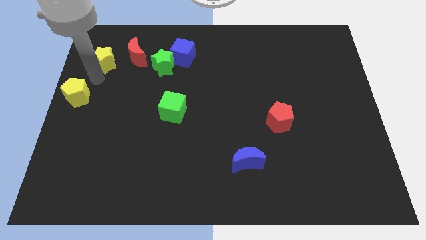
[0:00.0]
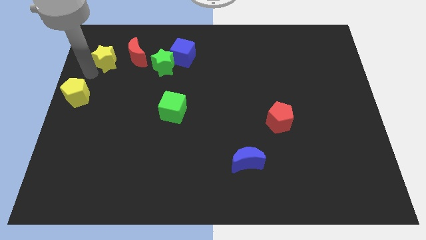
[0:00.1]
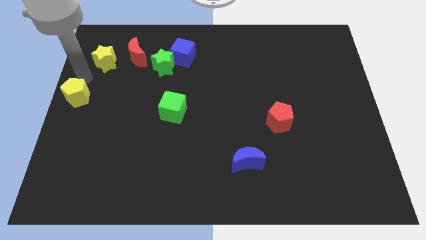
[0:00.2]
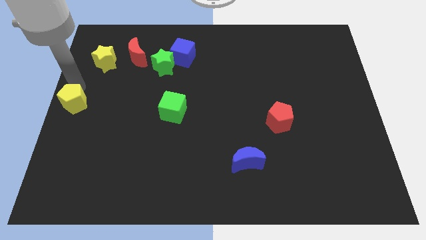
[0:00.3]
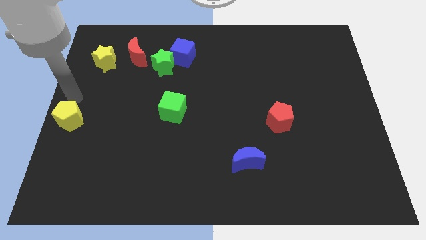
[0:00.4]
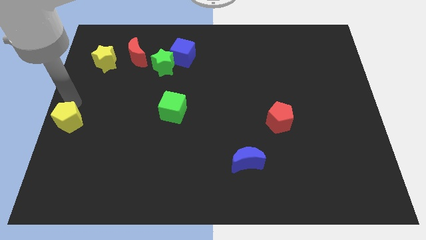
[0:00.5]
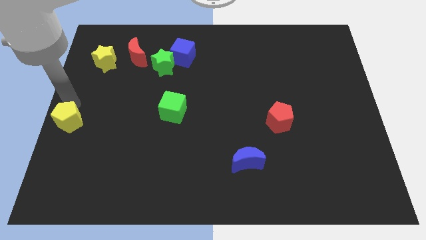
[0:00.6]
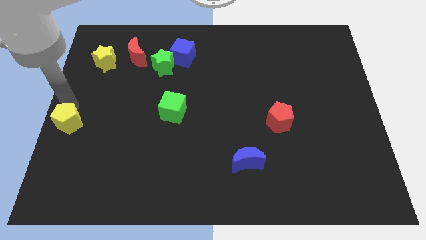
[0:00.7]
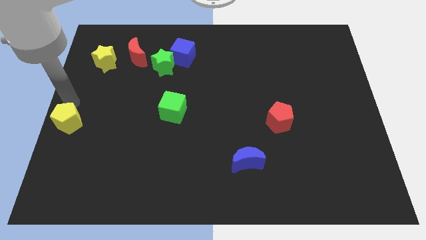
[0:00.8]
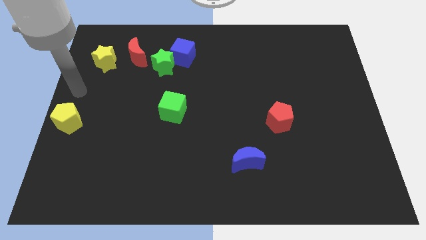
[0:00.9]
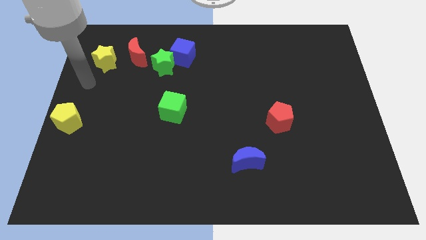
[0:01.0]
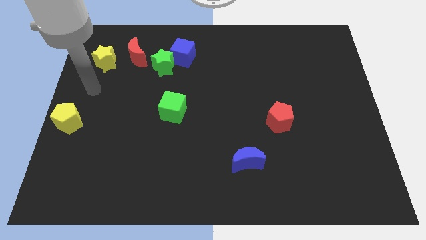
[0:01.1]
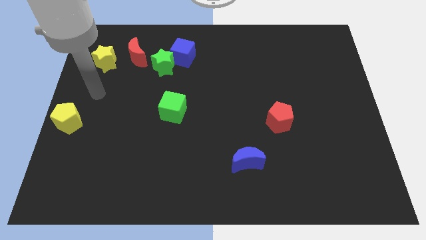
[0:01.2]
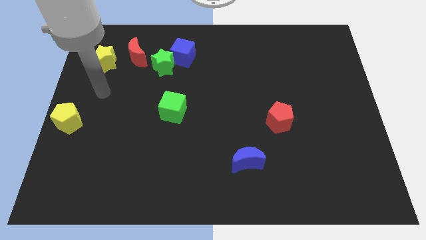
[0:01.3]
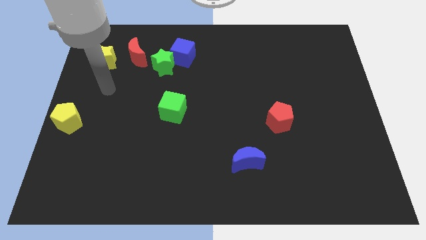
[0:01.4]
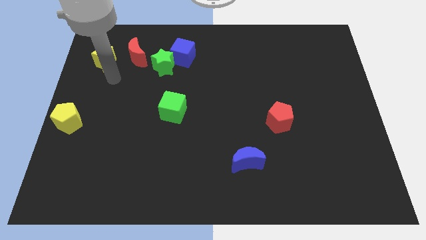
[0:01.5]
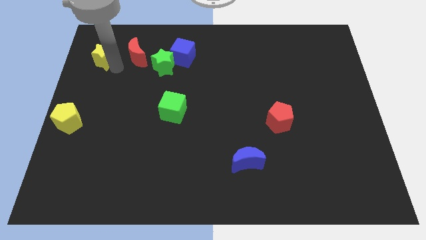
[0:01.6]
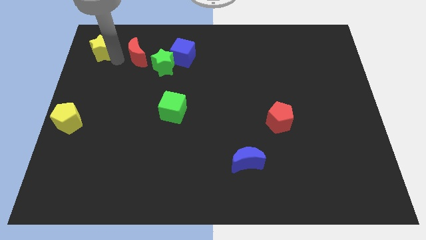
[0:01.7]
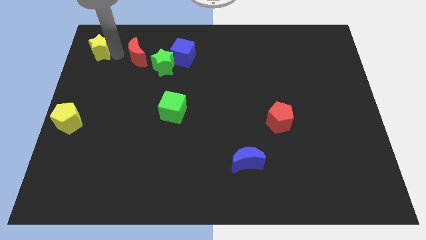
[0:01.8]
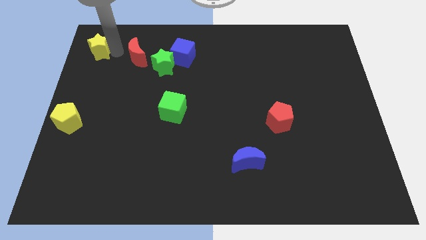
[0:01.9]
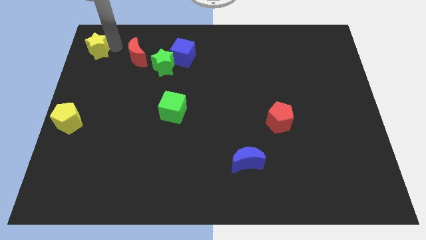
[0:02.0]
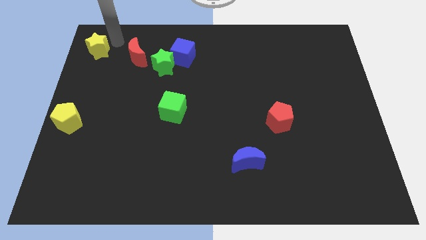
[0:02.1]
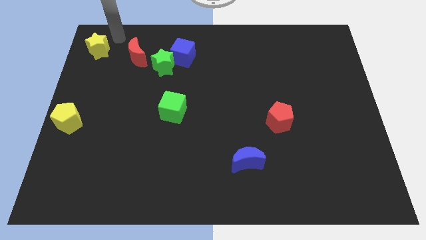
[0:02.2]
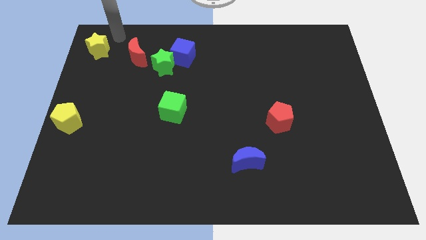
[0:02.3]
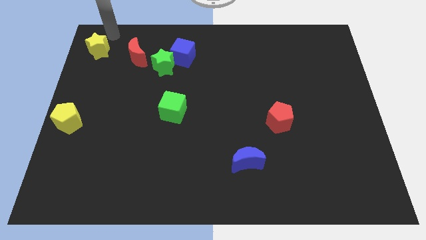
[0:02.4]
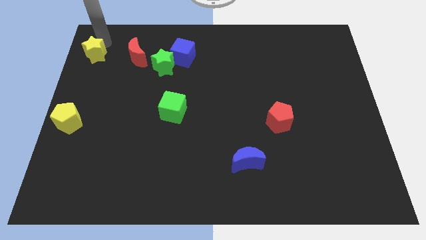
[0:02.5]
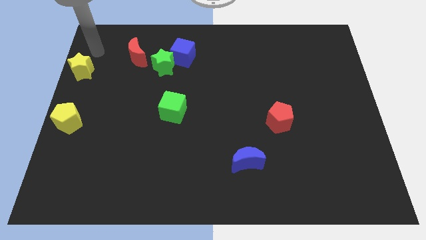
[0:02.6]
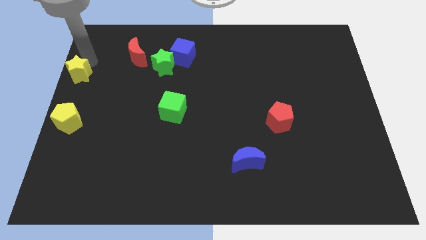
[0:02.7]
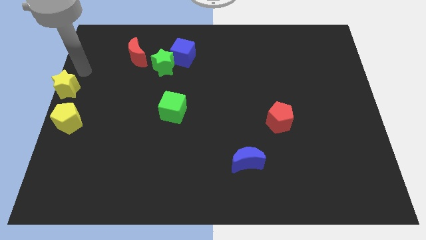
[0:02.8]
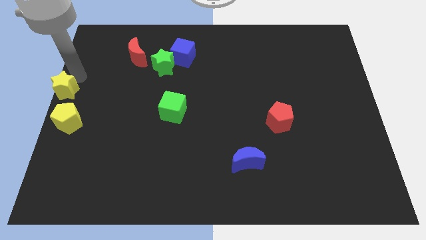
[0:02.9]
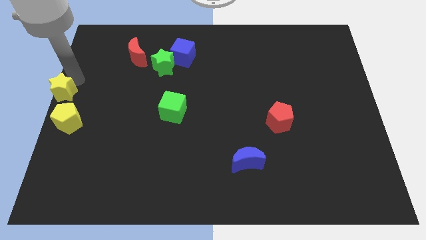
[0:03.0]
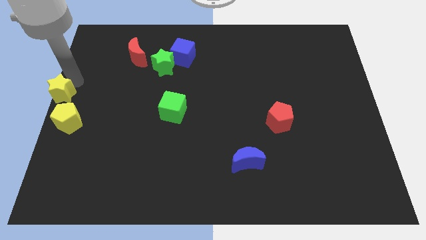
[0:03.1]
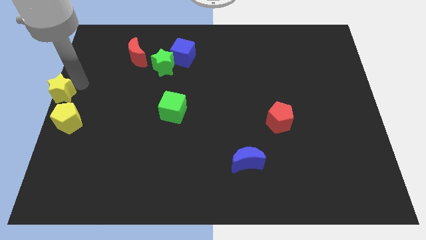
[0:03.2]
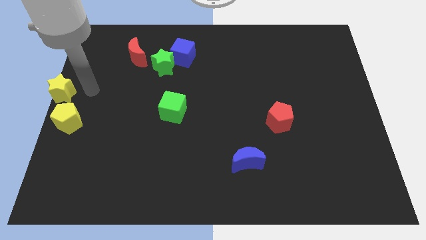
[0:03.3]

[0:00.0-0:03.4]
place the yellow star and the yellow pentagon at the center left corner

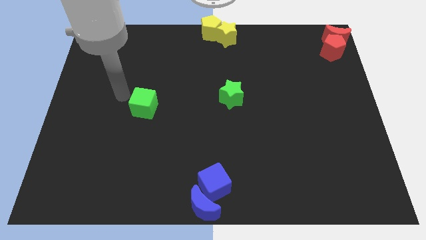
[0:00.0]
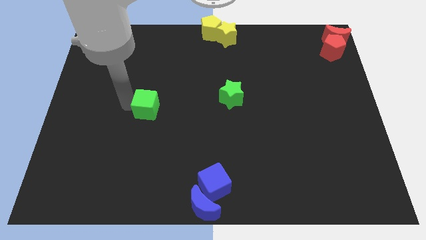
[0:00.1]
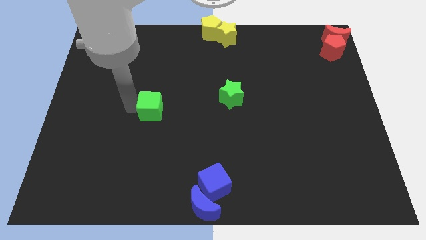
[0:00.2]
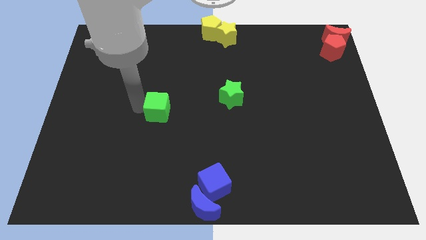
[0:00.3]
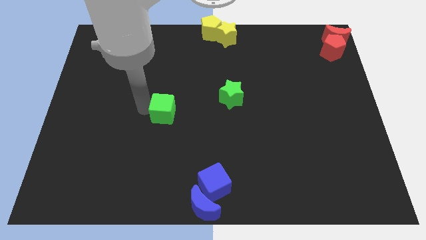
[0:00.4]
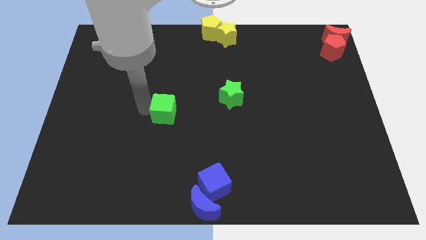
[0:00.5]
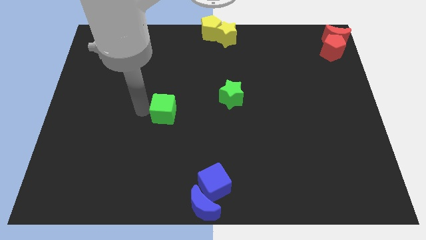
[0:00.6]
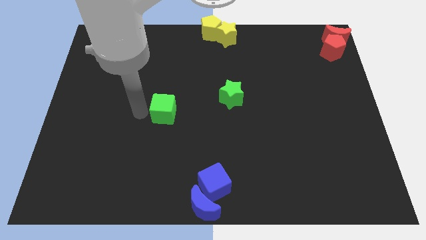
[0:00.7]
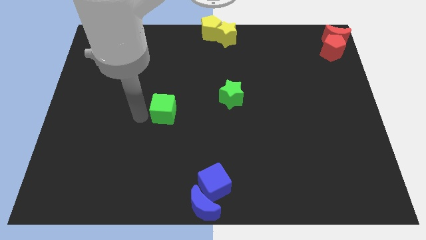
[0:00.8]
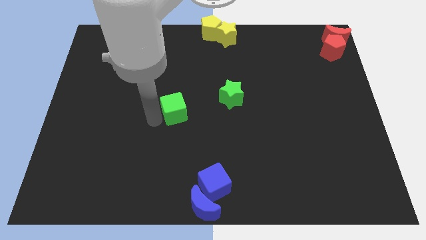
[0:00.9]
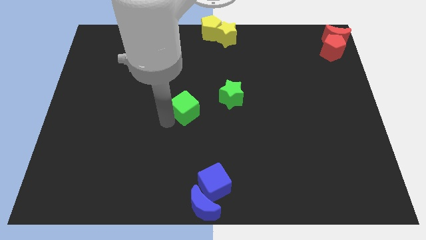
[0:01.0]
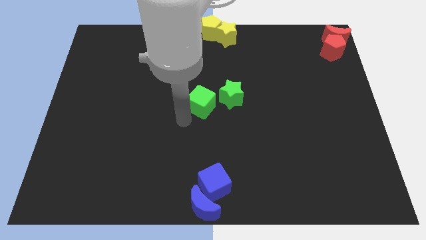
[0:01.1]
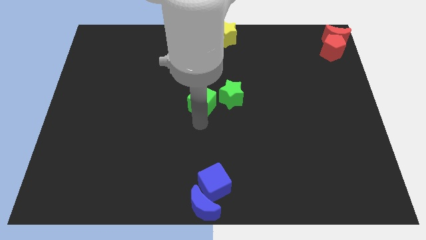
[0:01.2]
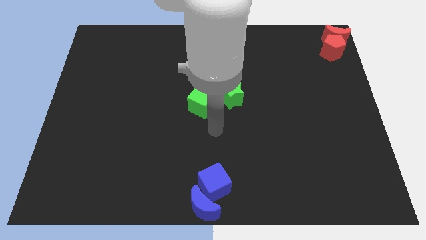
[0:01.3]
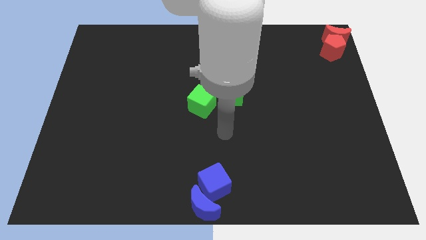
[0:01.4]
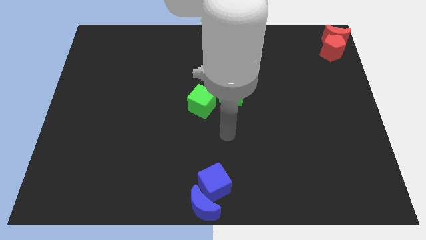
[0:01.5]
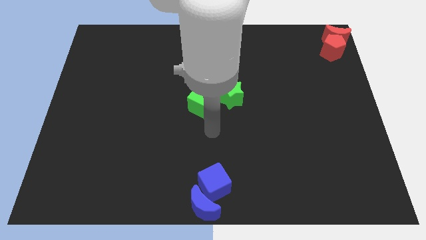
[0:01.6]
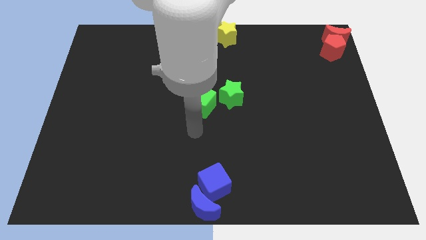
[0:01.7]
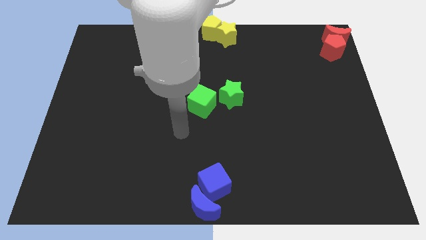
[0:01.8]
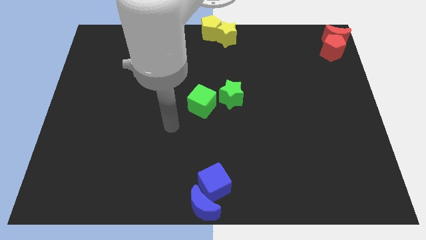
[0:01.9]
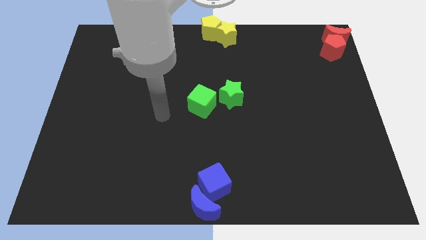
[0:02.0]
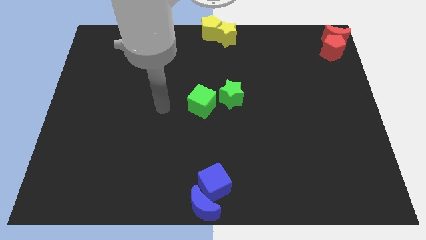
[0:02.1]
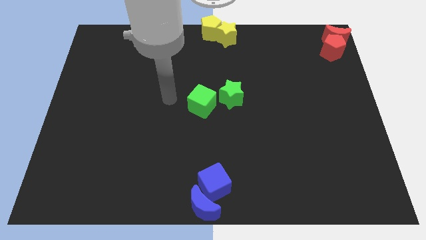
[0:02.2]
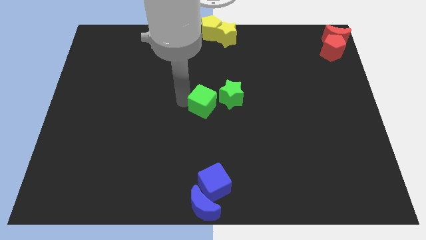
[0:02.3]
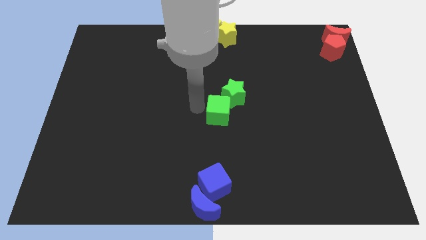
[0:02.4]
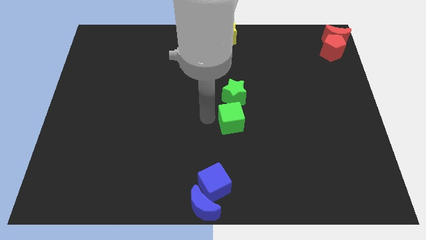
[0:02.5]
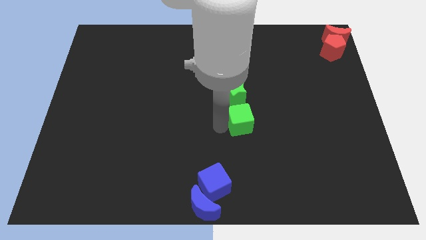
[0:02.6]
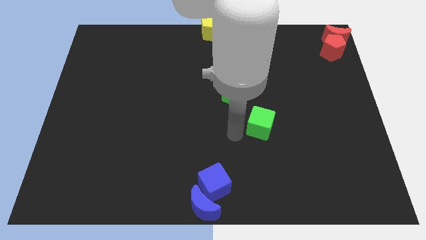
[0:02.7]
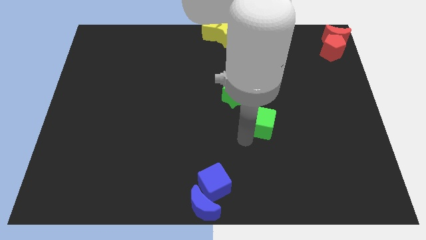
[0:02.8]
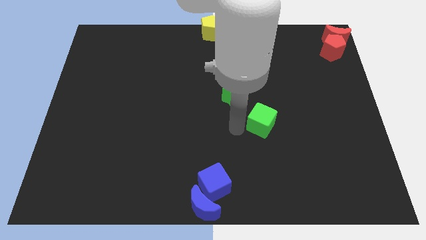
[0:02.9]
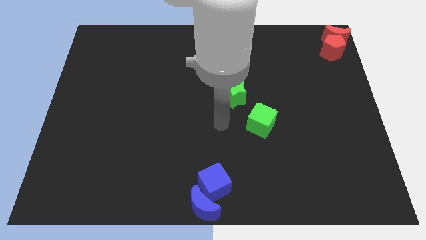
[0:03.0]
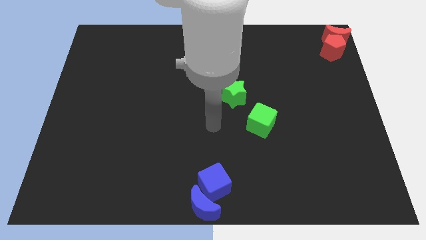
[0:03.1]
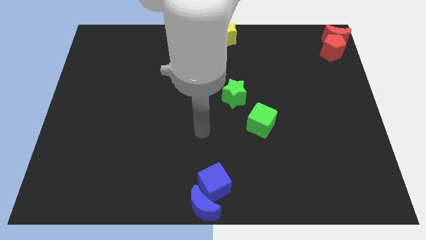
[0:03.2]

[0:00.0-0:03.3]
push the green cube diagonally to the green star

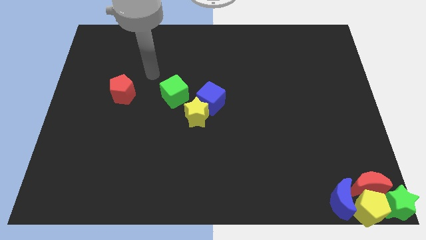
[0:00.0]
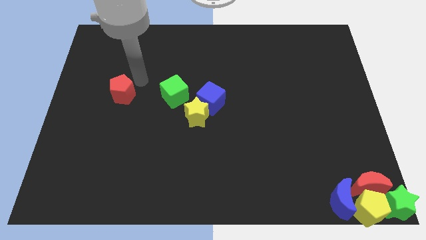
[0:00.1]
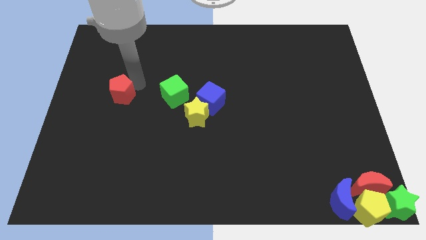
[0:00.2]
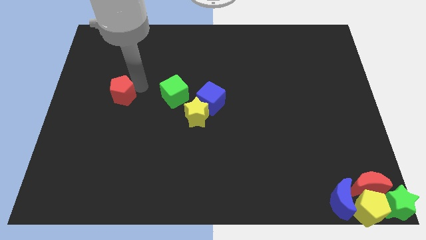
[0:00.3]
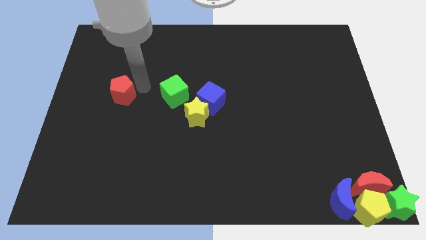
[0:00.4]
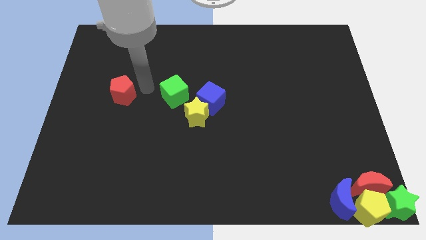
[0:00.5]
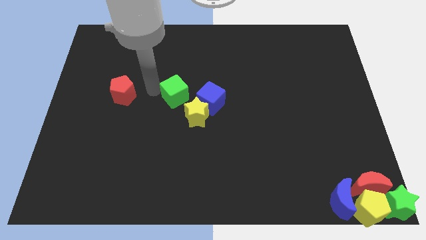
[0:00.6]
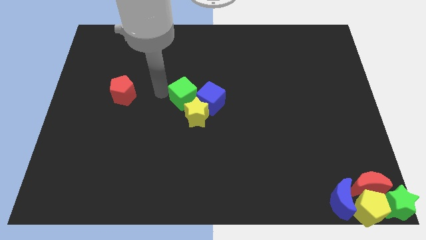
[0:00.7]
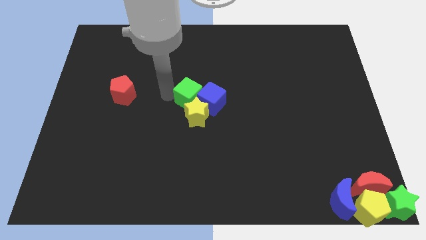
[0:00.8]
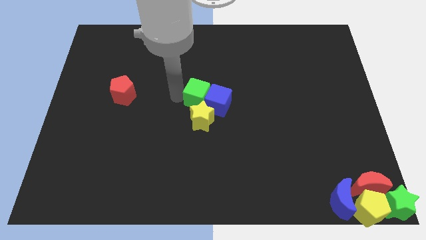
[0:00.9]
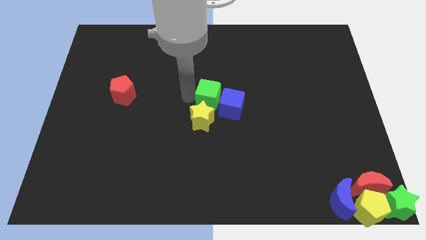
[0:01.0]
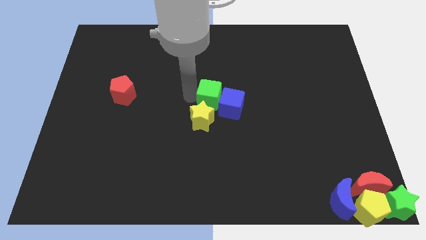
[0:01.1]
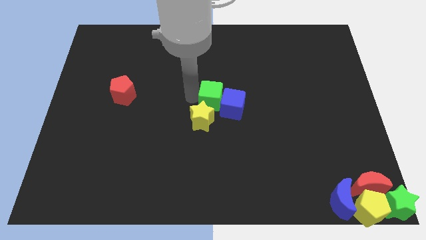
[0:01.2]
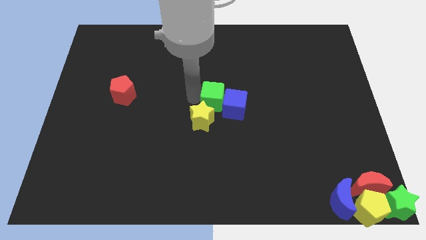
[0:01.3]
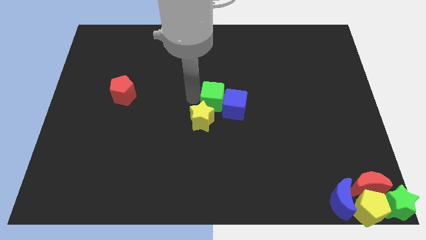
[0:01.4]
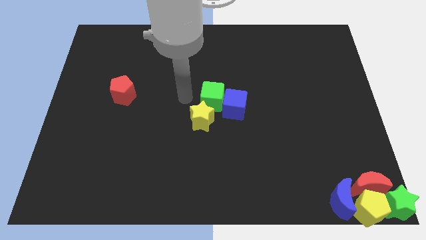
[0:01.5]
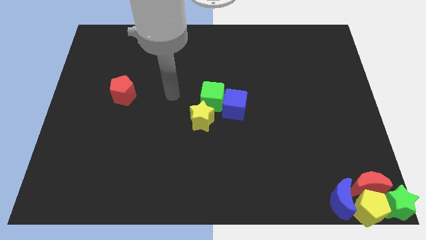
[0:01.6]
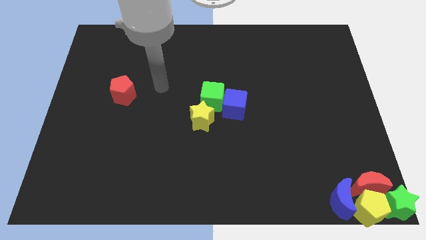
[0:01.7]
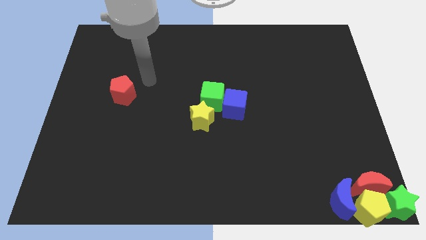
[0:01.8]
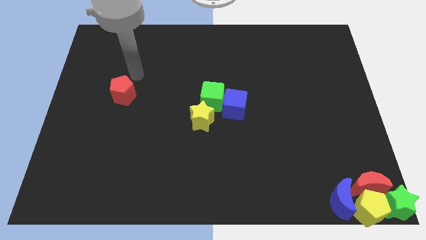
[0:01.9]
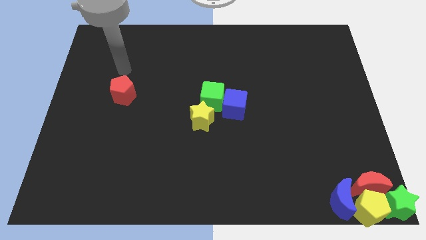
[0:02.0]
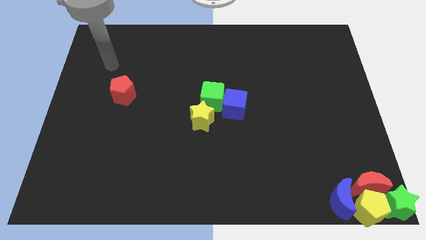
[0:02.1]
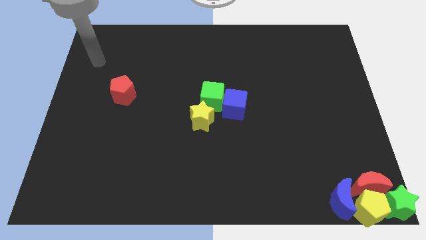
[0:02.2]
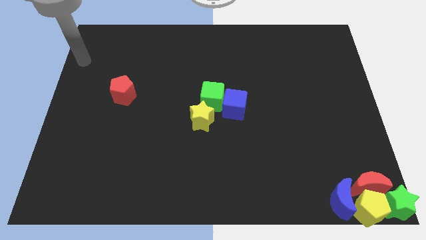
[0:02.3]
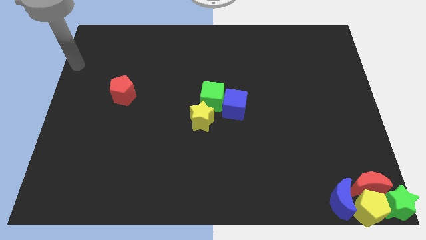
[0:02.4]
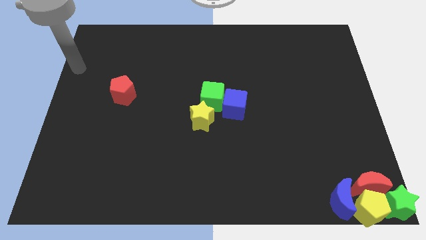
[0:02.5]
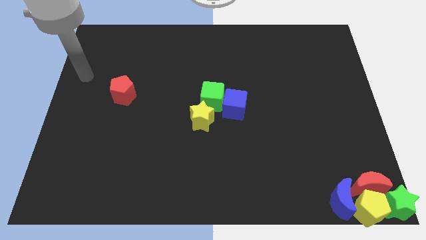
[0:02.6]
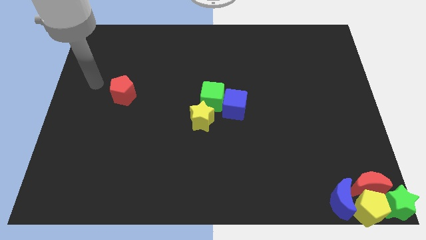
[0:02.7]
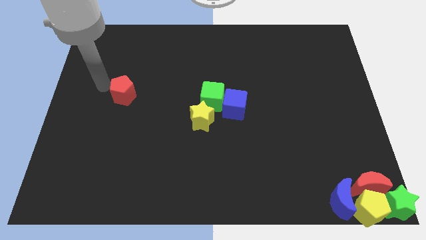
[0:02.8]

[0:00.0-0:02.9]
move the blue and green cubes to right
